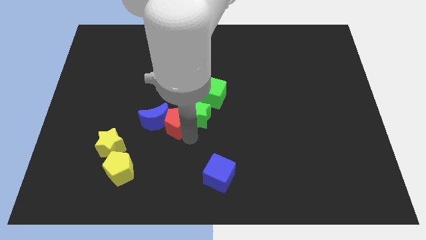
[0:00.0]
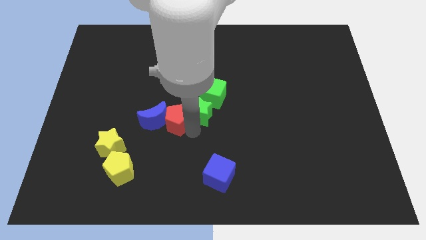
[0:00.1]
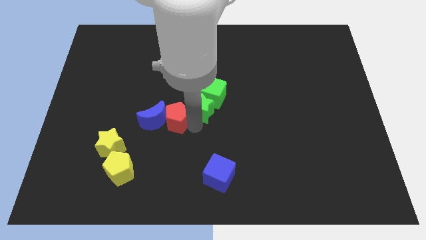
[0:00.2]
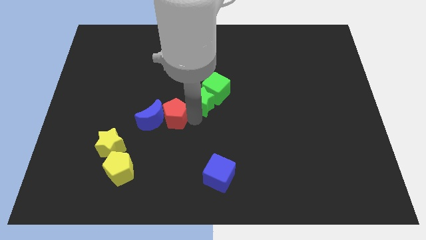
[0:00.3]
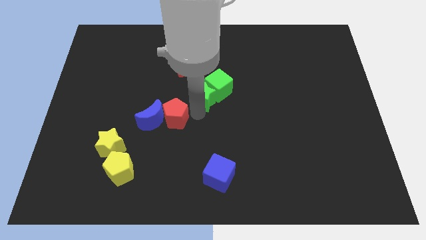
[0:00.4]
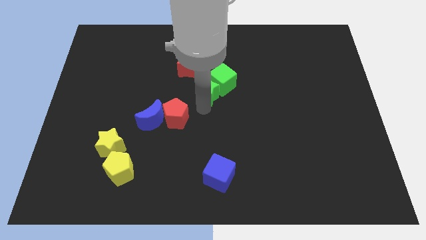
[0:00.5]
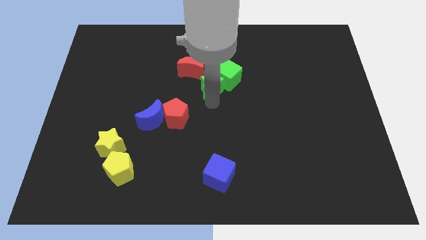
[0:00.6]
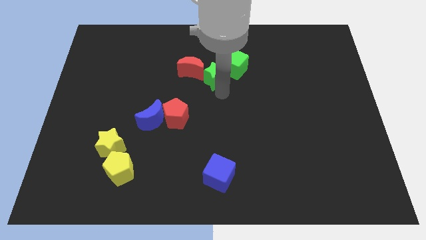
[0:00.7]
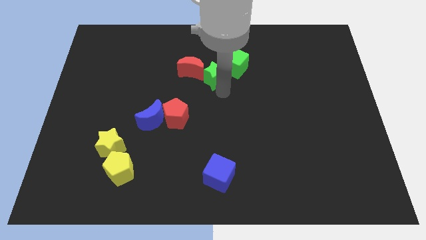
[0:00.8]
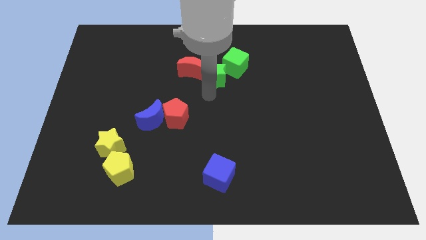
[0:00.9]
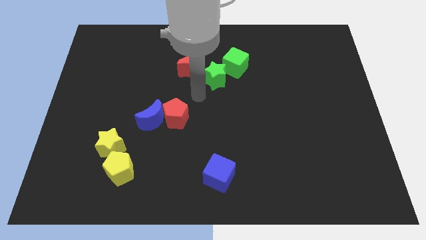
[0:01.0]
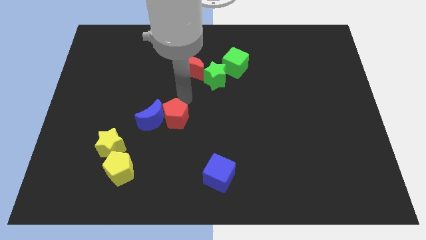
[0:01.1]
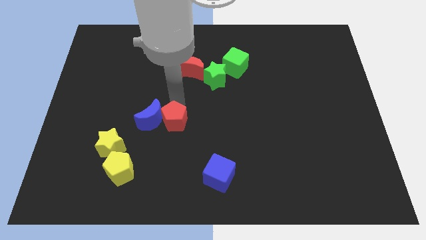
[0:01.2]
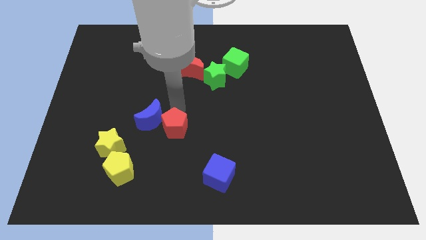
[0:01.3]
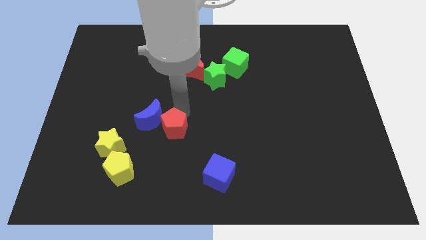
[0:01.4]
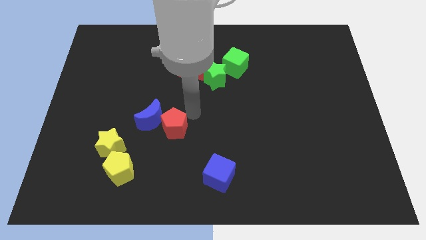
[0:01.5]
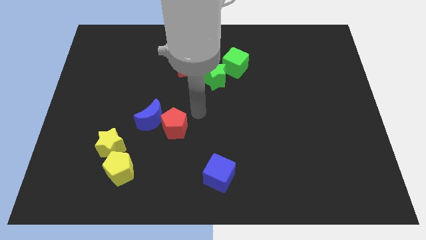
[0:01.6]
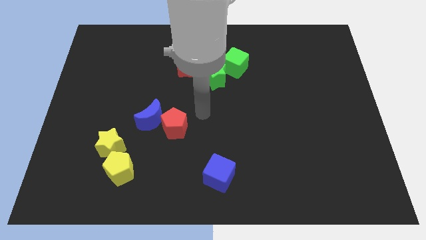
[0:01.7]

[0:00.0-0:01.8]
separate the green star and the red pentagon

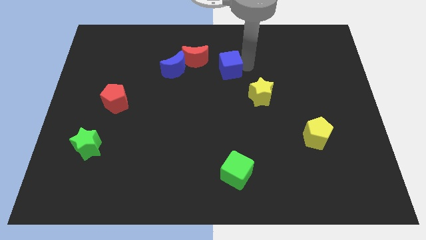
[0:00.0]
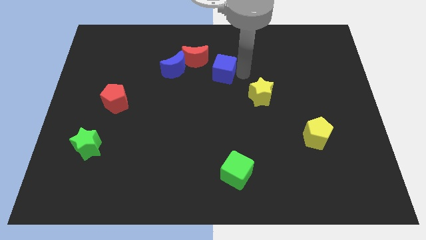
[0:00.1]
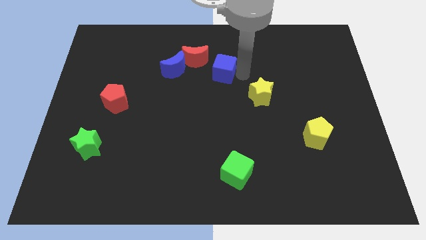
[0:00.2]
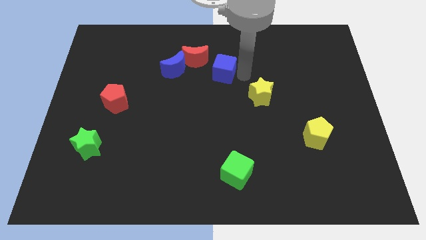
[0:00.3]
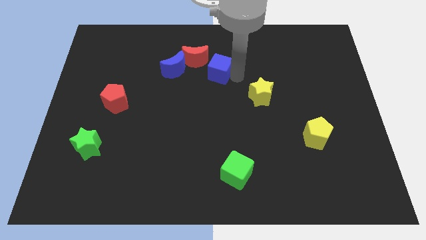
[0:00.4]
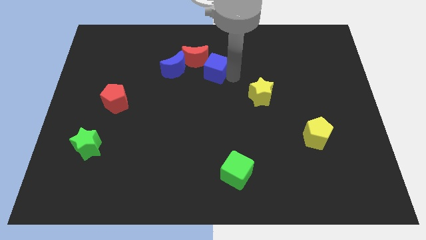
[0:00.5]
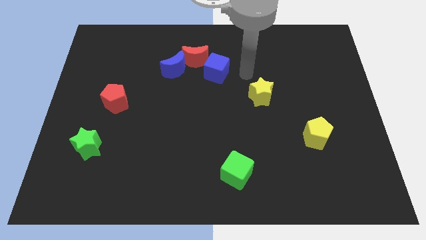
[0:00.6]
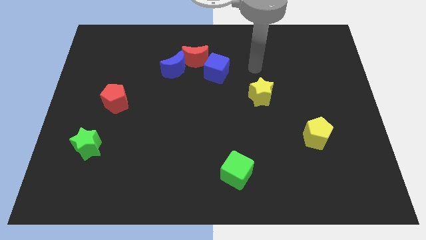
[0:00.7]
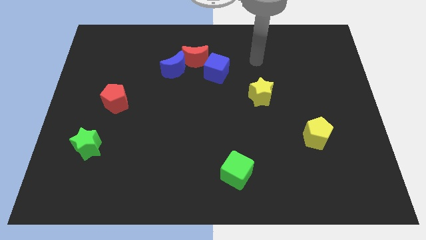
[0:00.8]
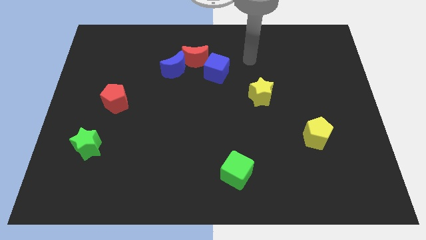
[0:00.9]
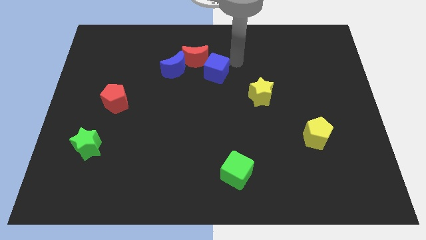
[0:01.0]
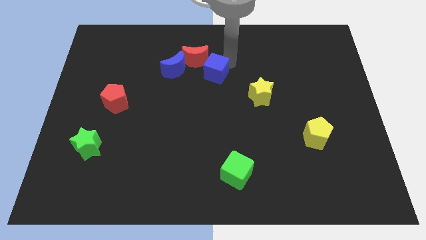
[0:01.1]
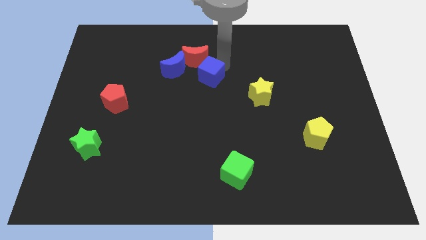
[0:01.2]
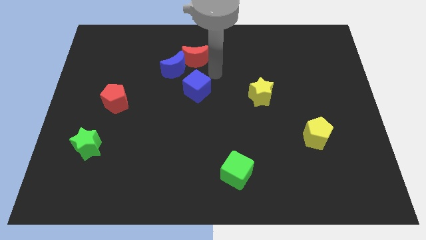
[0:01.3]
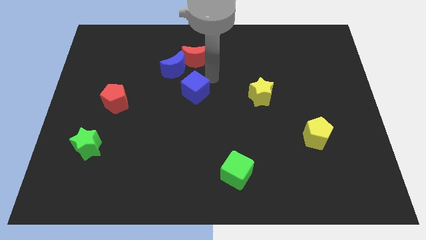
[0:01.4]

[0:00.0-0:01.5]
push the blue cube to the bottom of the red crescent

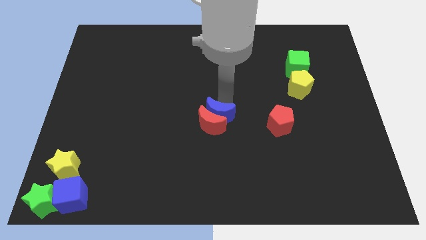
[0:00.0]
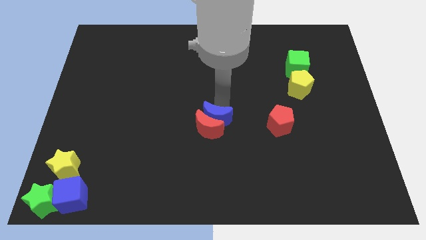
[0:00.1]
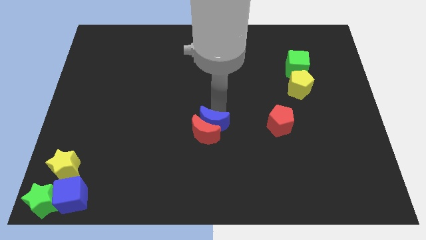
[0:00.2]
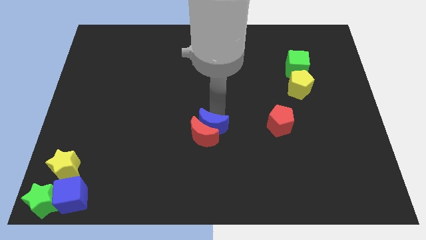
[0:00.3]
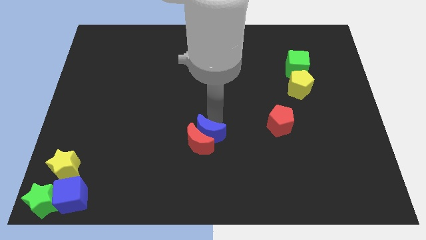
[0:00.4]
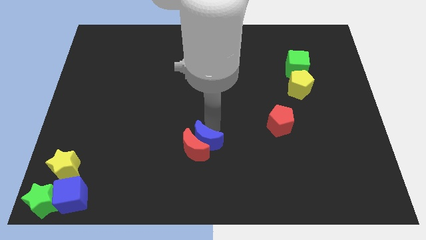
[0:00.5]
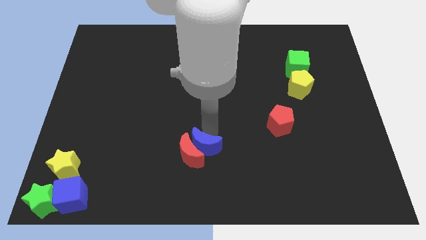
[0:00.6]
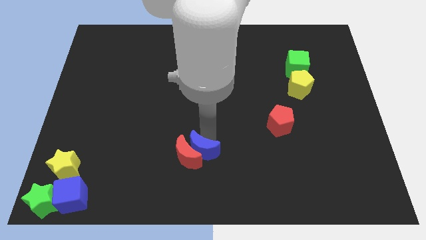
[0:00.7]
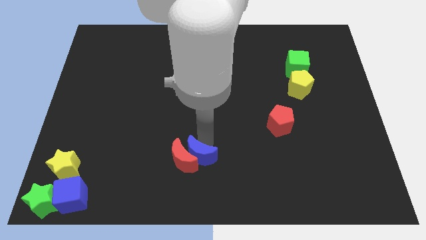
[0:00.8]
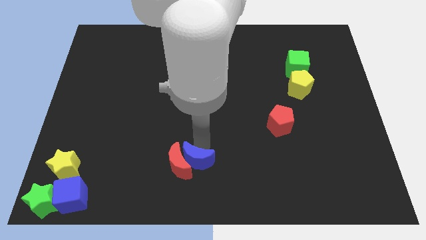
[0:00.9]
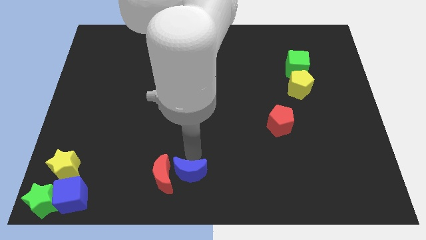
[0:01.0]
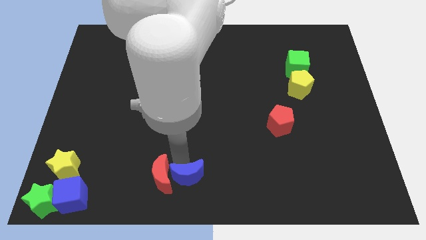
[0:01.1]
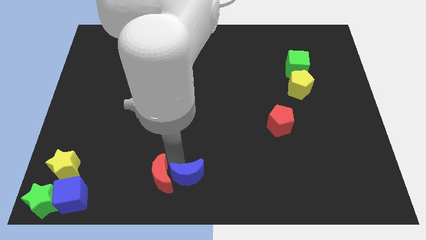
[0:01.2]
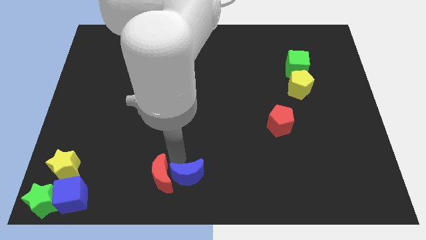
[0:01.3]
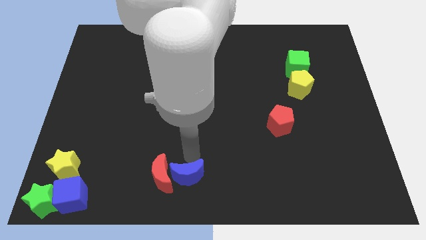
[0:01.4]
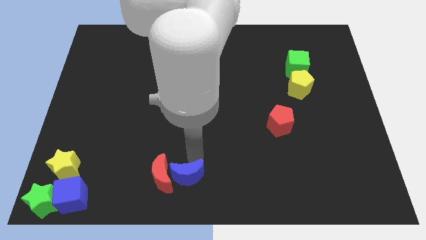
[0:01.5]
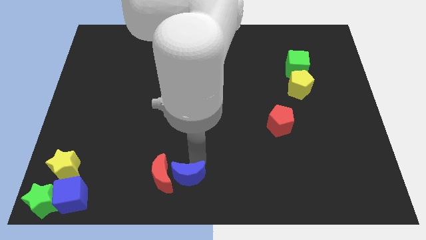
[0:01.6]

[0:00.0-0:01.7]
push blue moon and red moon downwards

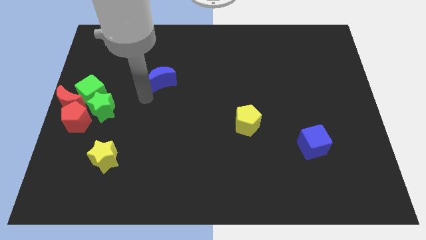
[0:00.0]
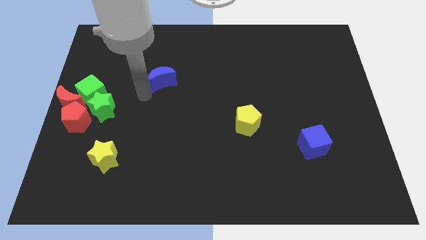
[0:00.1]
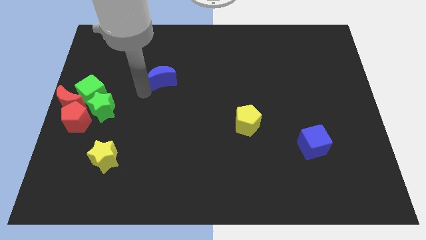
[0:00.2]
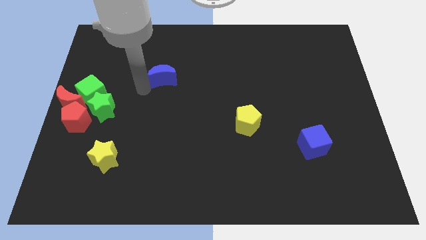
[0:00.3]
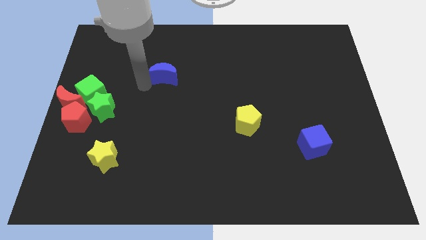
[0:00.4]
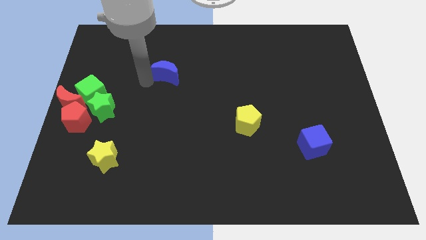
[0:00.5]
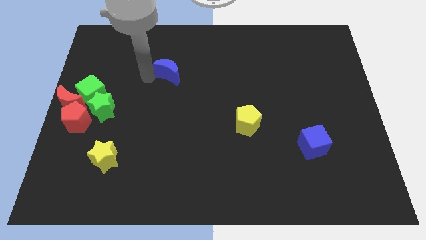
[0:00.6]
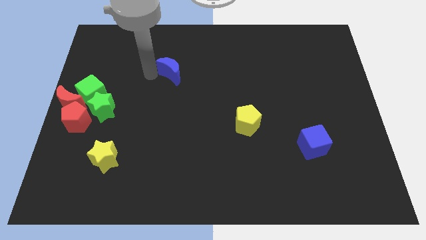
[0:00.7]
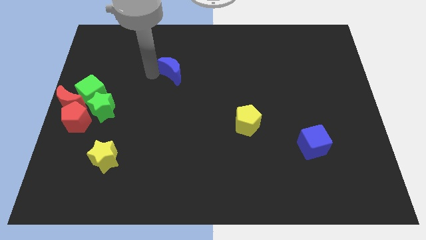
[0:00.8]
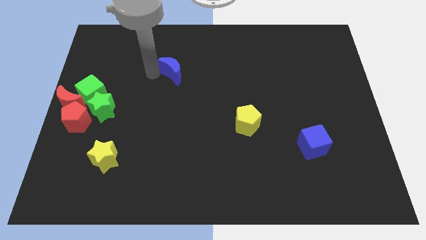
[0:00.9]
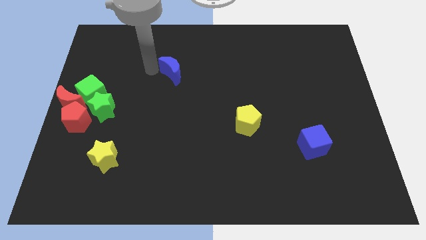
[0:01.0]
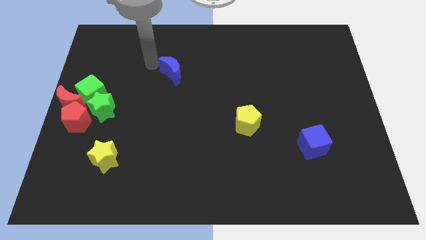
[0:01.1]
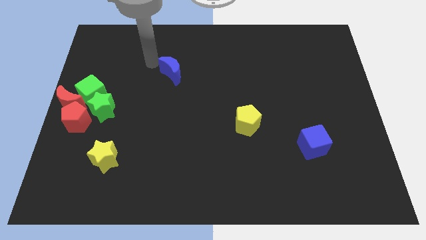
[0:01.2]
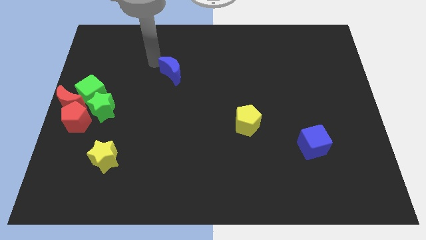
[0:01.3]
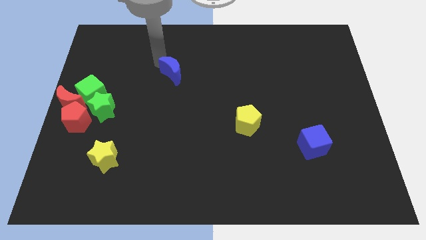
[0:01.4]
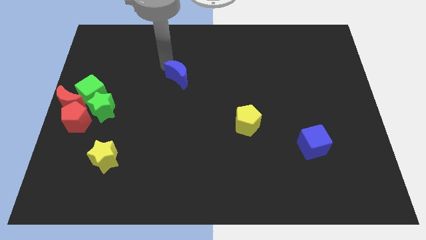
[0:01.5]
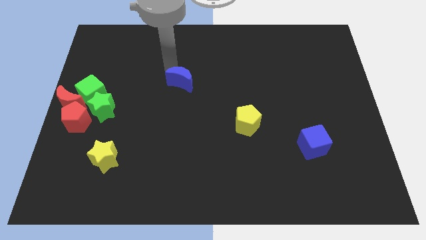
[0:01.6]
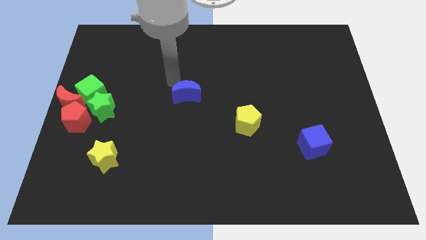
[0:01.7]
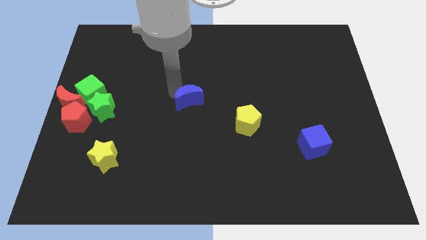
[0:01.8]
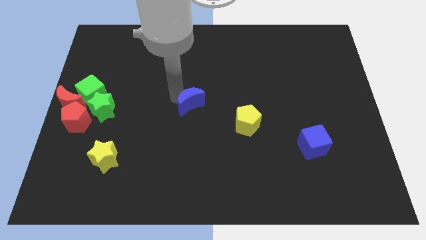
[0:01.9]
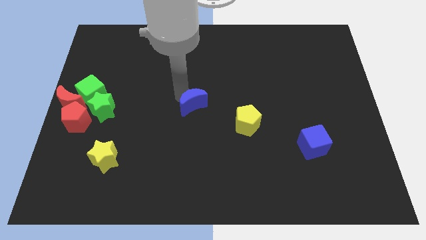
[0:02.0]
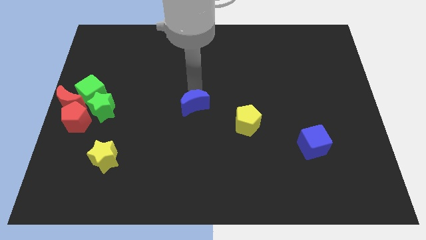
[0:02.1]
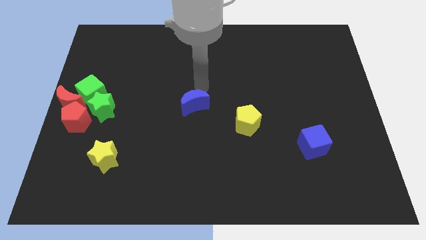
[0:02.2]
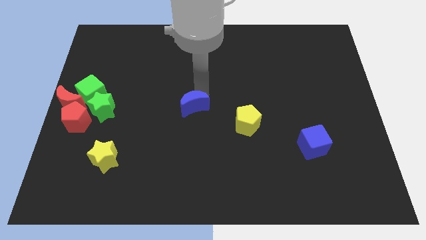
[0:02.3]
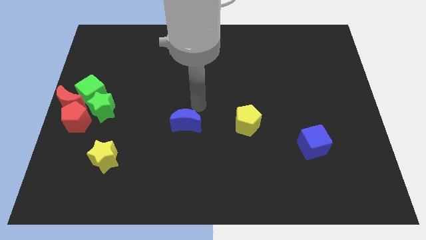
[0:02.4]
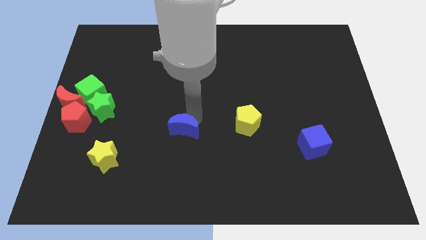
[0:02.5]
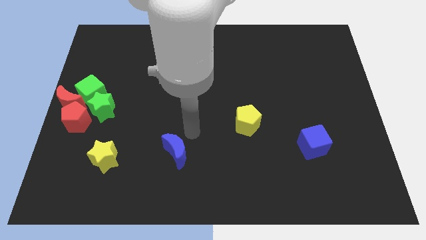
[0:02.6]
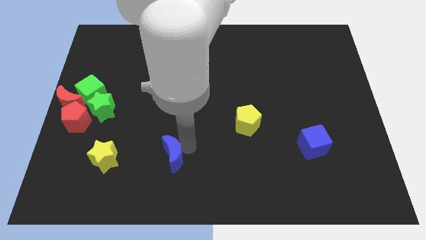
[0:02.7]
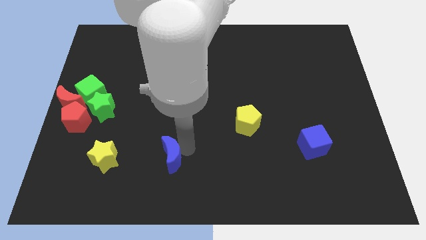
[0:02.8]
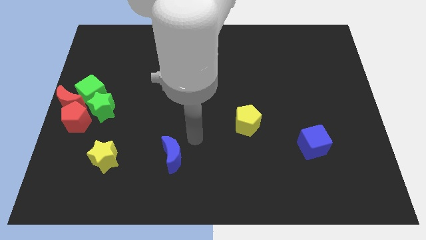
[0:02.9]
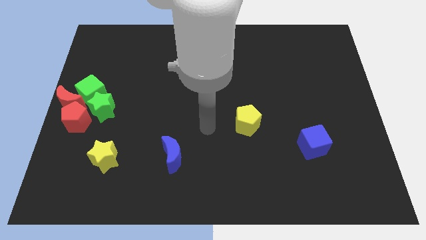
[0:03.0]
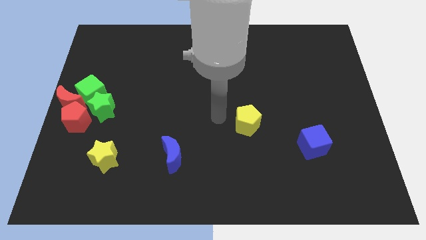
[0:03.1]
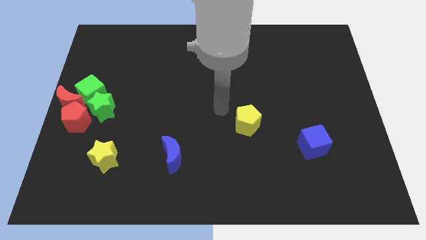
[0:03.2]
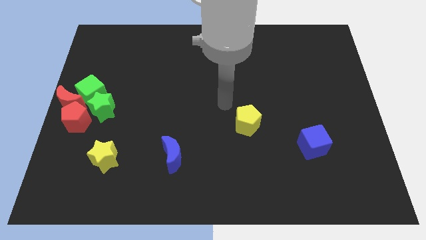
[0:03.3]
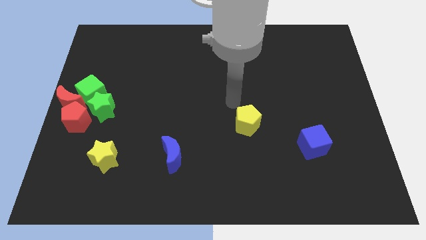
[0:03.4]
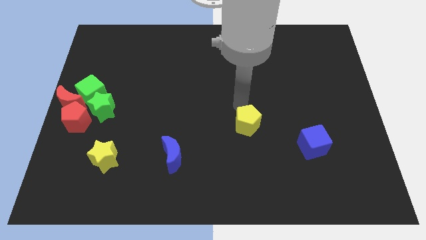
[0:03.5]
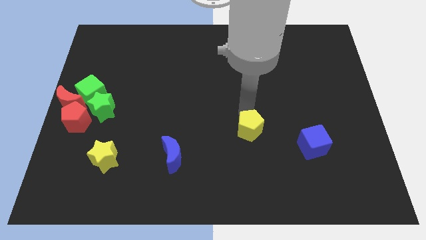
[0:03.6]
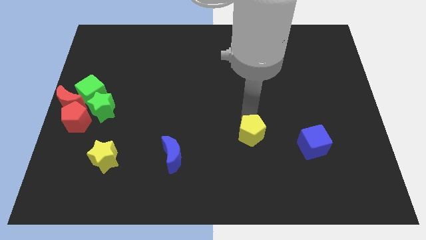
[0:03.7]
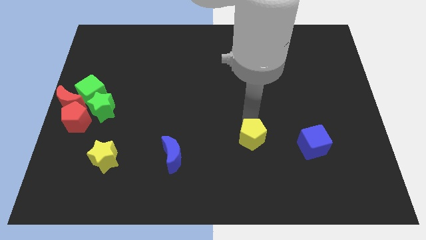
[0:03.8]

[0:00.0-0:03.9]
push the blue moon slightly to the bottom of the board

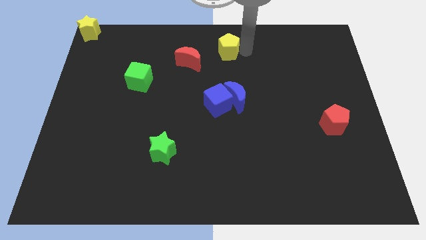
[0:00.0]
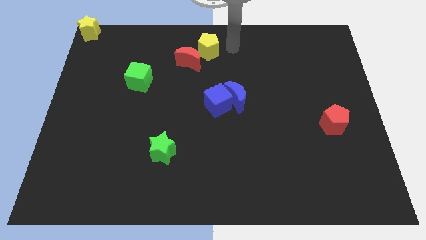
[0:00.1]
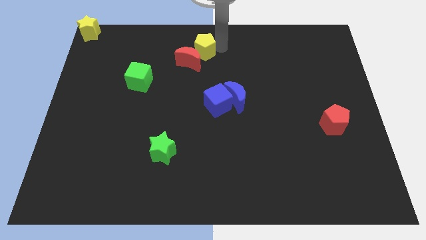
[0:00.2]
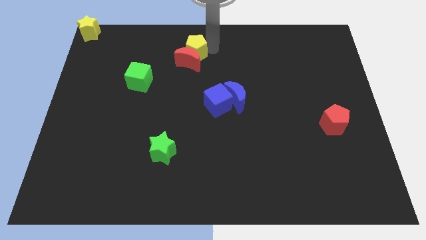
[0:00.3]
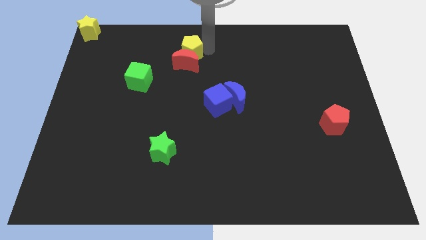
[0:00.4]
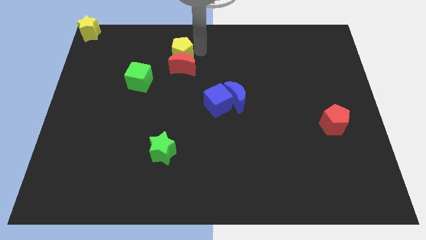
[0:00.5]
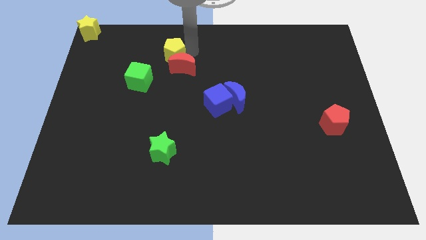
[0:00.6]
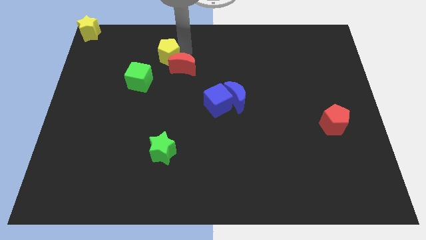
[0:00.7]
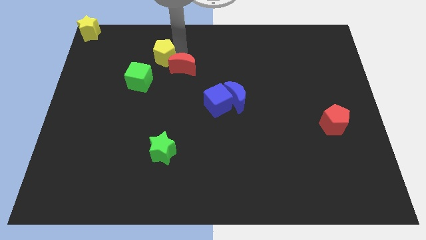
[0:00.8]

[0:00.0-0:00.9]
move the yellow pentagon on the top left of the red moon
